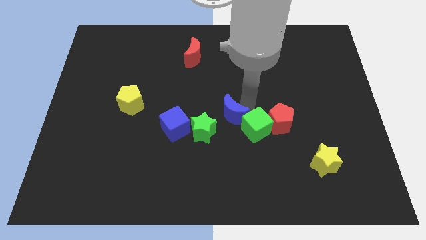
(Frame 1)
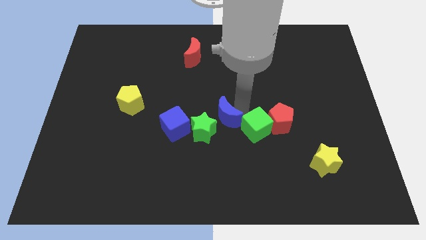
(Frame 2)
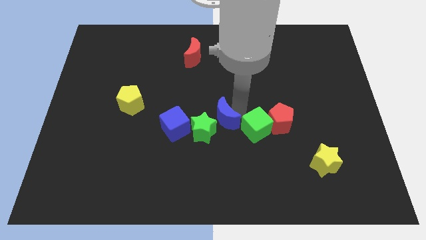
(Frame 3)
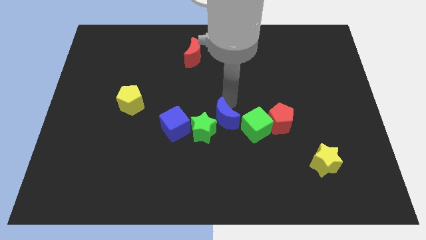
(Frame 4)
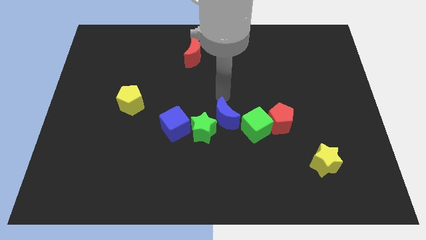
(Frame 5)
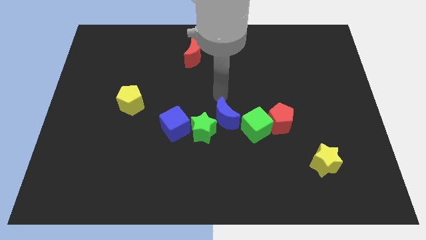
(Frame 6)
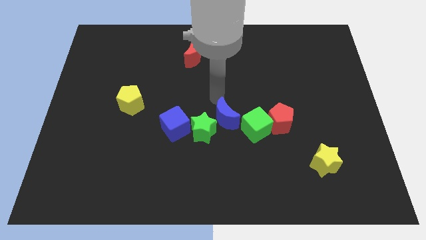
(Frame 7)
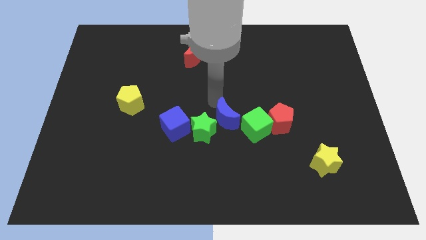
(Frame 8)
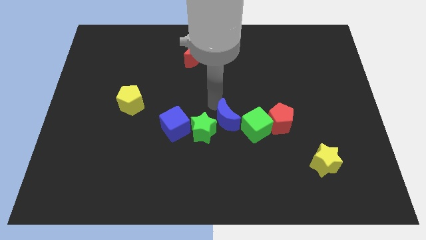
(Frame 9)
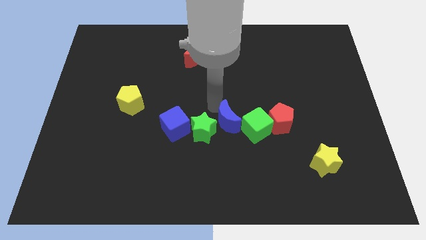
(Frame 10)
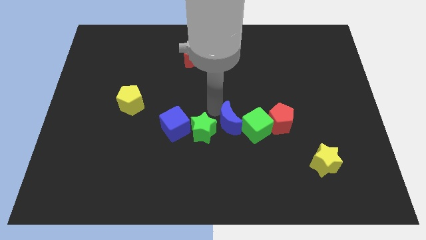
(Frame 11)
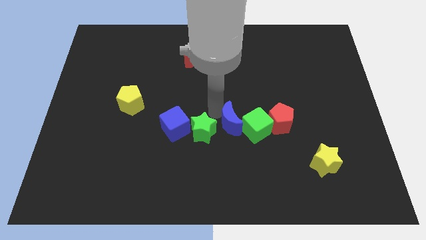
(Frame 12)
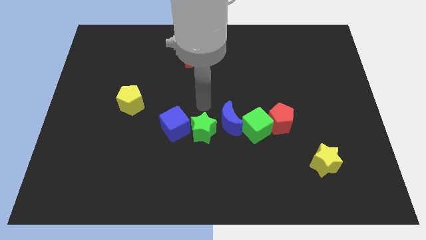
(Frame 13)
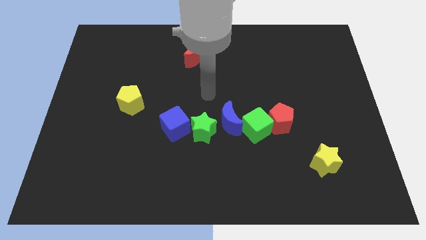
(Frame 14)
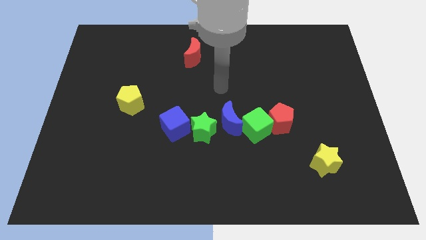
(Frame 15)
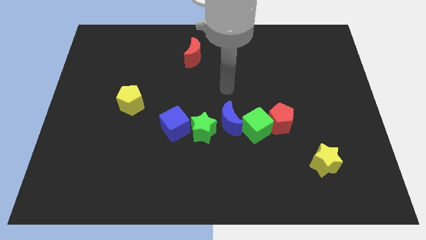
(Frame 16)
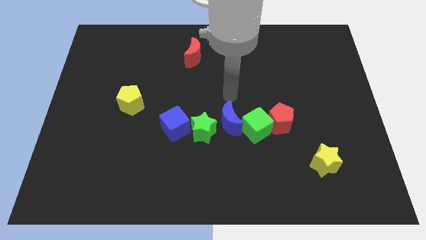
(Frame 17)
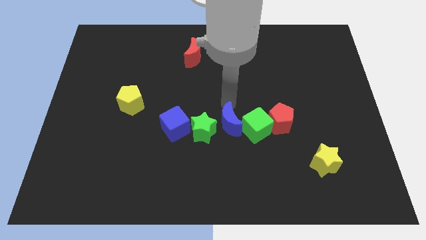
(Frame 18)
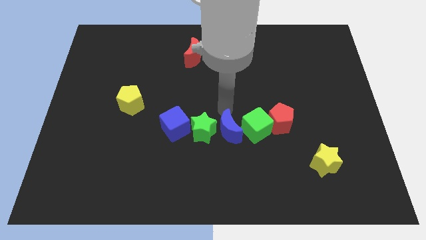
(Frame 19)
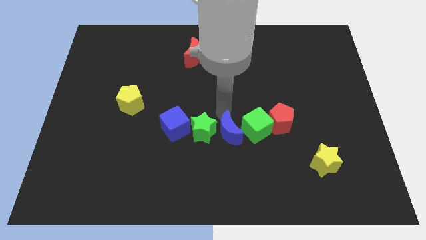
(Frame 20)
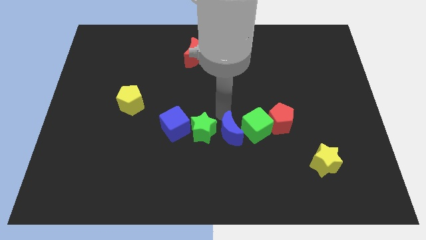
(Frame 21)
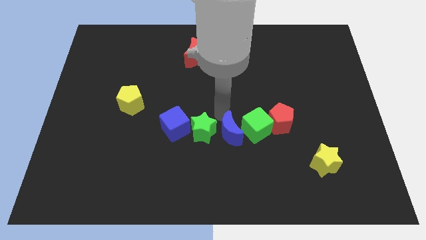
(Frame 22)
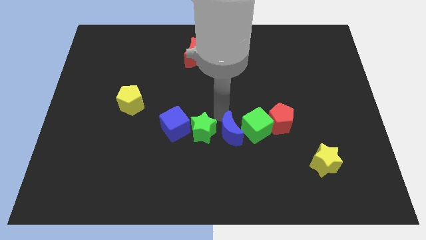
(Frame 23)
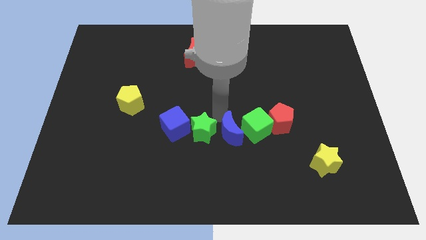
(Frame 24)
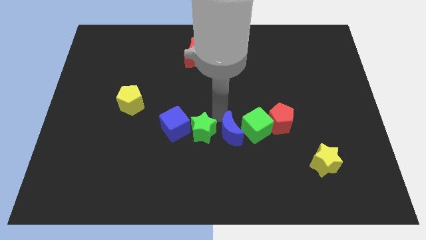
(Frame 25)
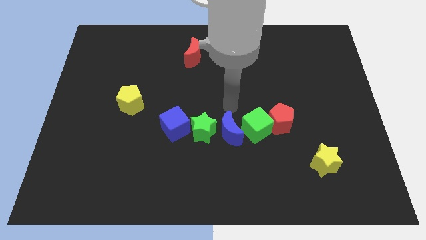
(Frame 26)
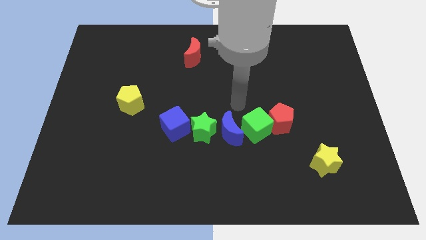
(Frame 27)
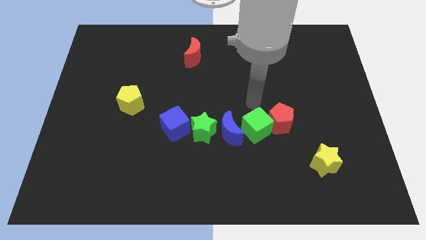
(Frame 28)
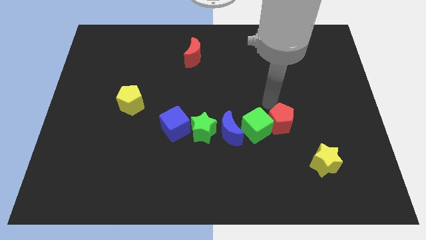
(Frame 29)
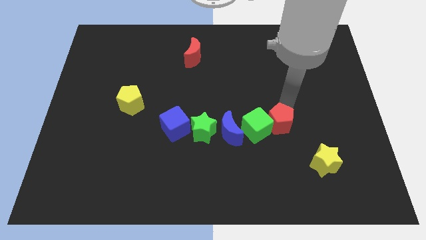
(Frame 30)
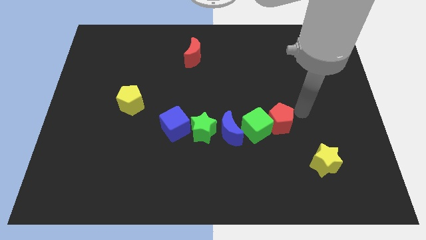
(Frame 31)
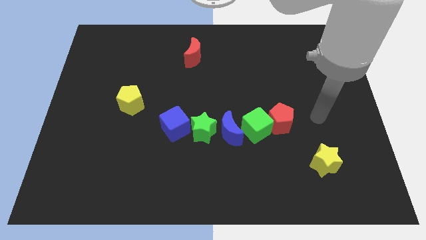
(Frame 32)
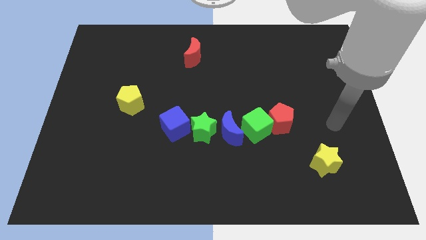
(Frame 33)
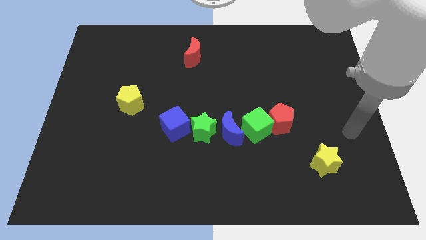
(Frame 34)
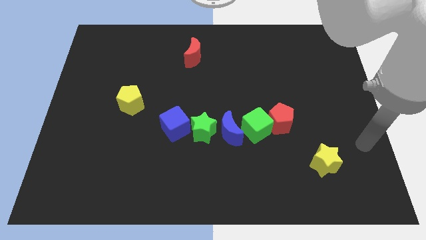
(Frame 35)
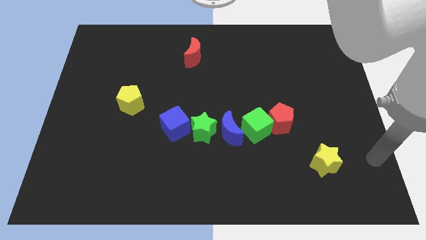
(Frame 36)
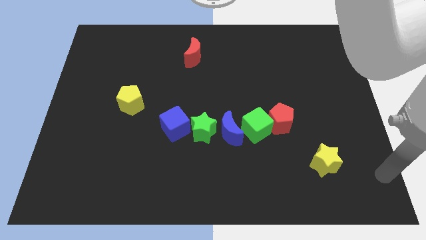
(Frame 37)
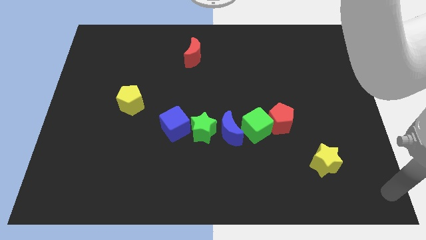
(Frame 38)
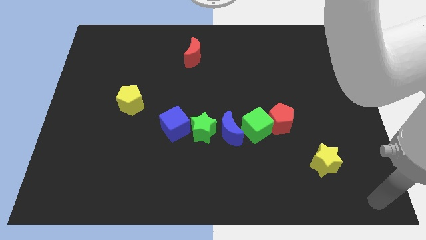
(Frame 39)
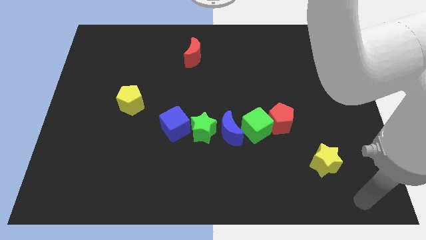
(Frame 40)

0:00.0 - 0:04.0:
push the blue crescent to the left of the green cube

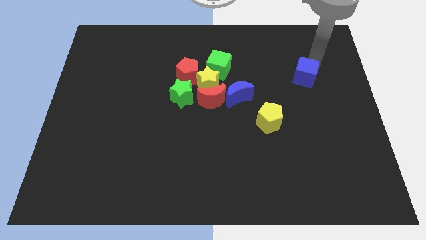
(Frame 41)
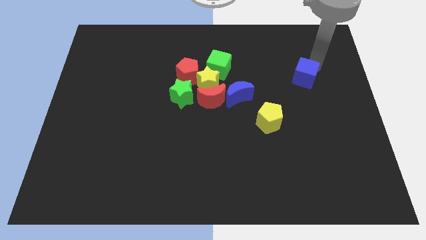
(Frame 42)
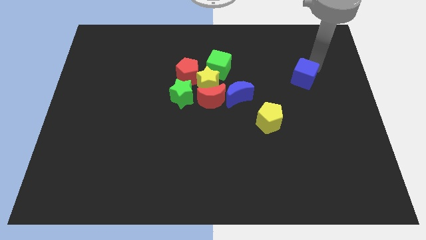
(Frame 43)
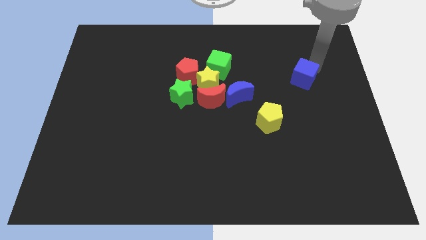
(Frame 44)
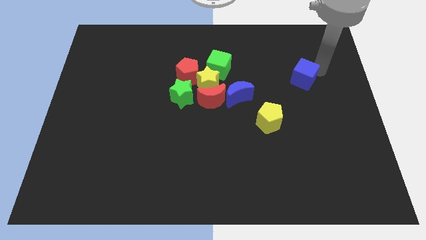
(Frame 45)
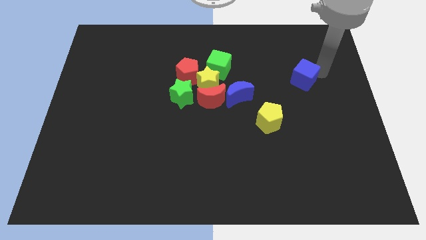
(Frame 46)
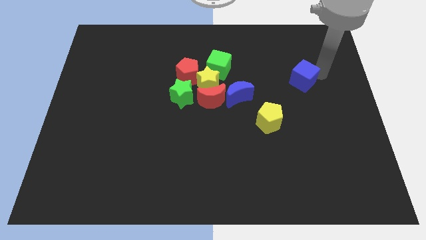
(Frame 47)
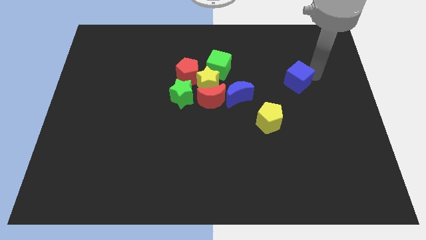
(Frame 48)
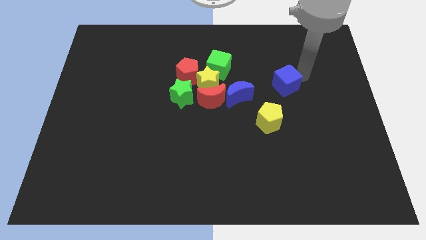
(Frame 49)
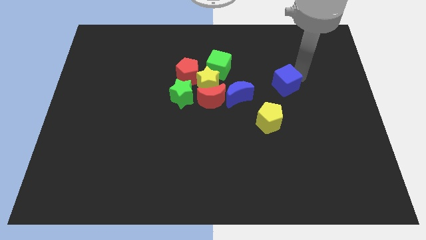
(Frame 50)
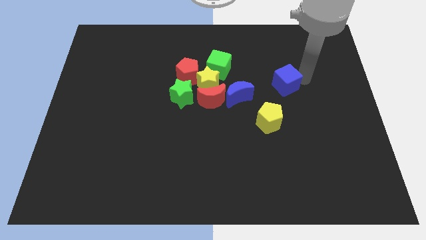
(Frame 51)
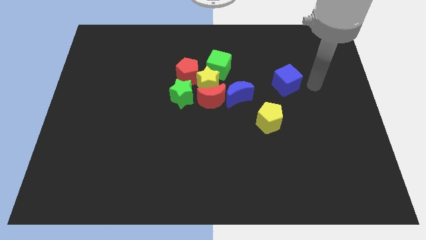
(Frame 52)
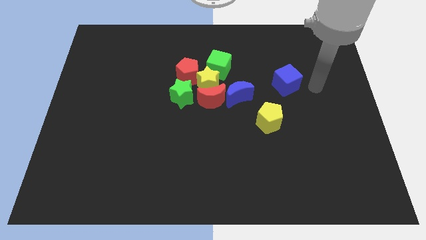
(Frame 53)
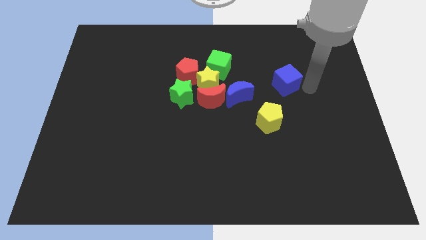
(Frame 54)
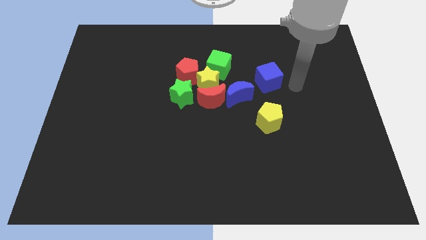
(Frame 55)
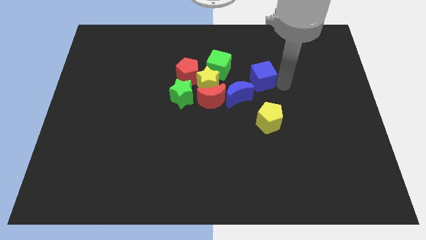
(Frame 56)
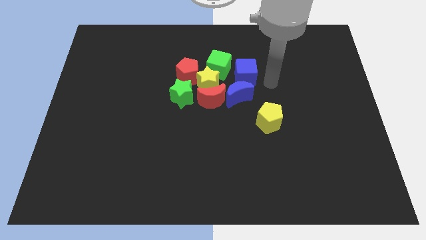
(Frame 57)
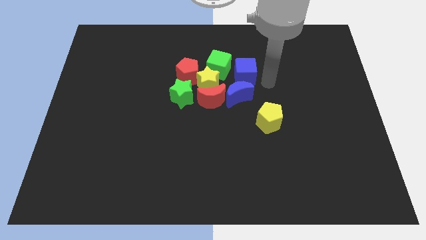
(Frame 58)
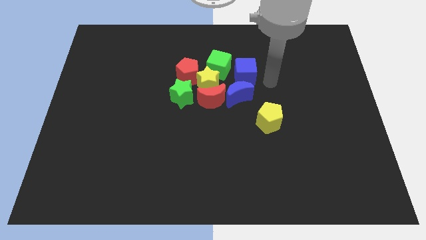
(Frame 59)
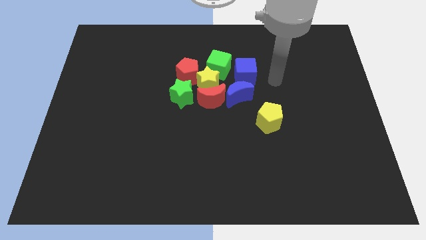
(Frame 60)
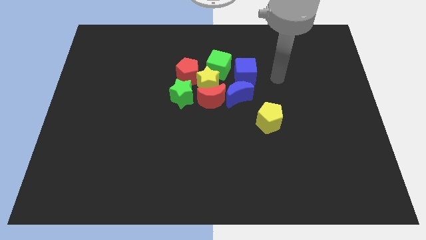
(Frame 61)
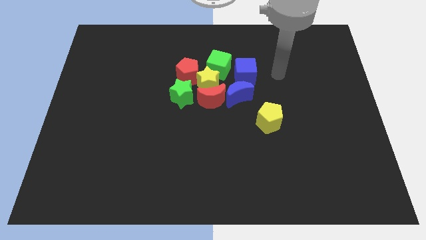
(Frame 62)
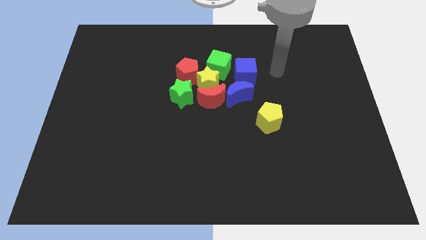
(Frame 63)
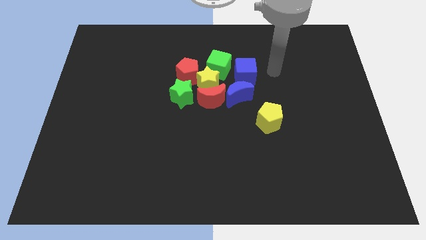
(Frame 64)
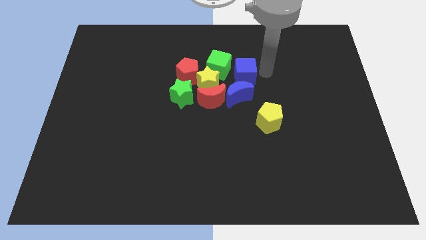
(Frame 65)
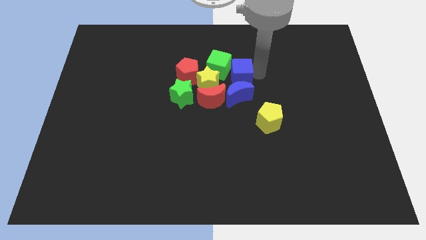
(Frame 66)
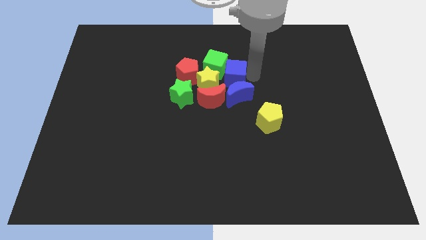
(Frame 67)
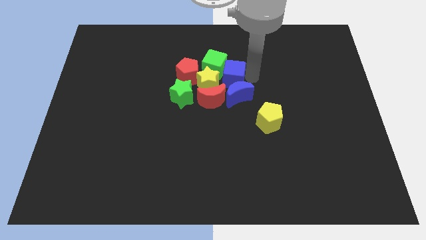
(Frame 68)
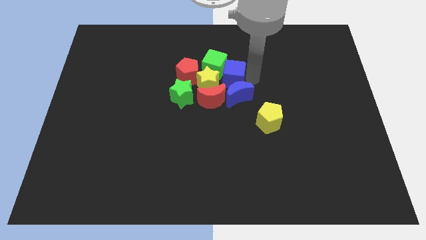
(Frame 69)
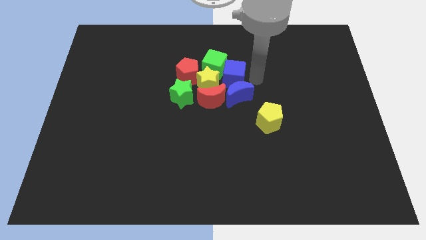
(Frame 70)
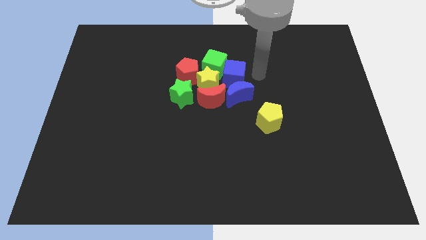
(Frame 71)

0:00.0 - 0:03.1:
move blue cube above blue moon

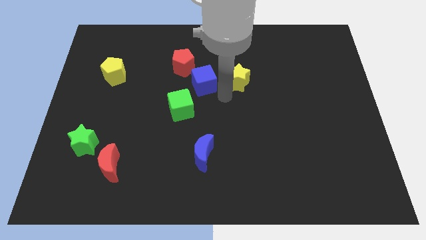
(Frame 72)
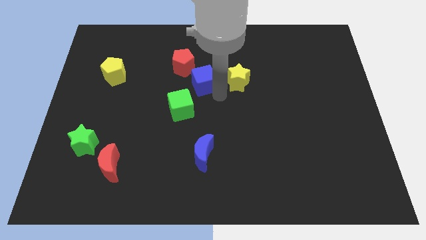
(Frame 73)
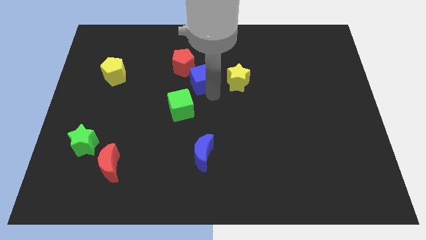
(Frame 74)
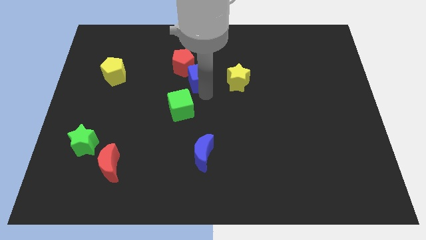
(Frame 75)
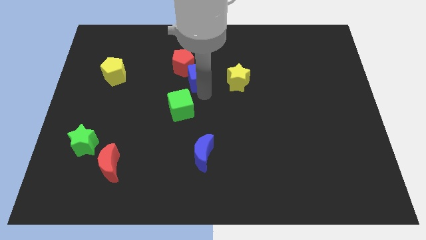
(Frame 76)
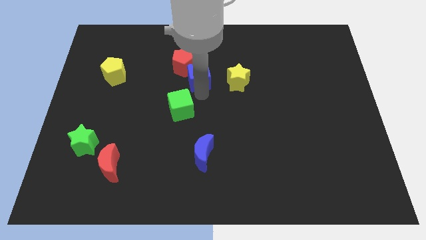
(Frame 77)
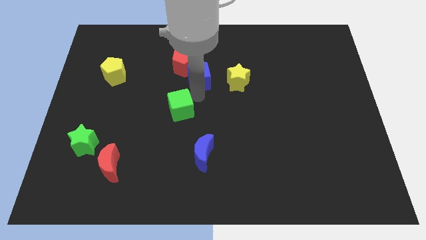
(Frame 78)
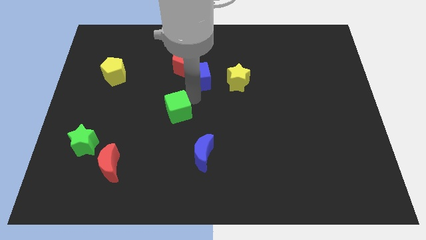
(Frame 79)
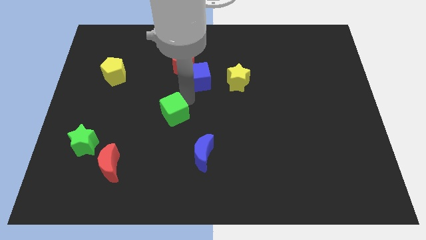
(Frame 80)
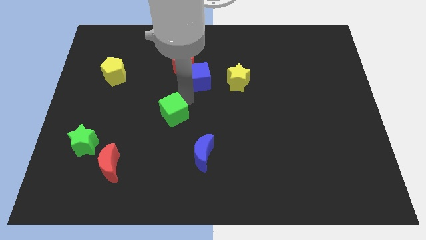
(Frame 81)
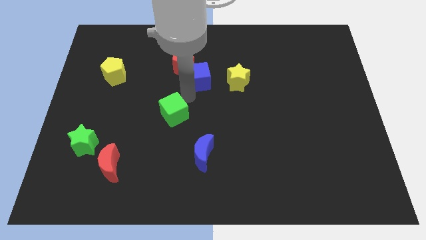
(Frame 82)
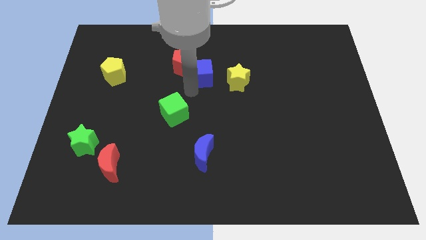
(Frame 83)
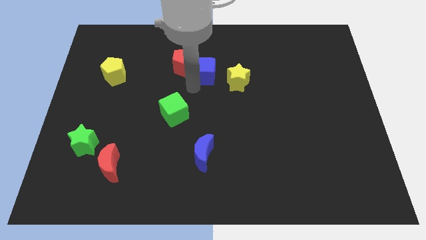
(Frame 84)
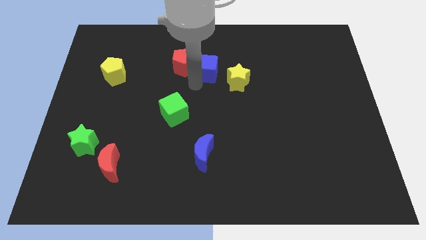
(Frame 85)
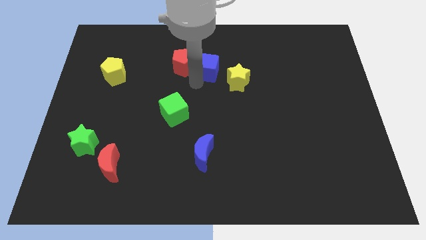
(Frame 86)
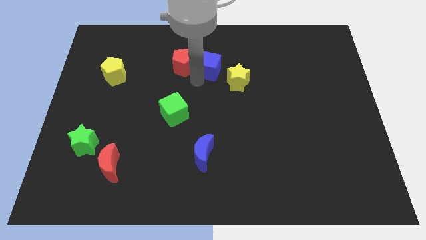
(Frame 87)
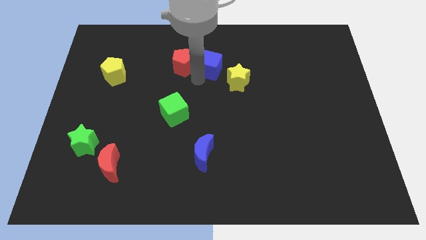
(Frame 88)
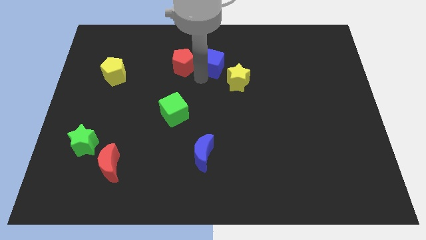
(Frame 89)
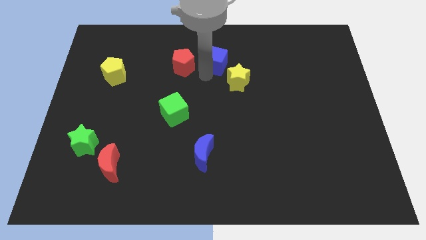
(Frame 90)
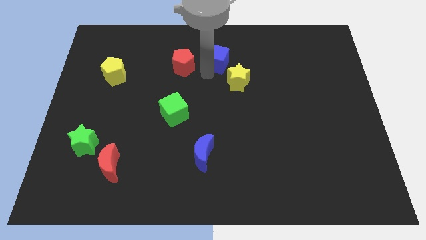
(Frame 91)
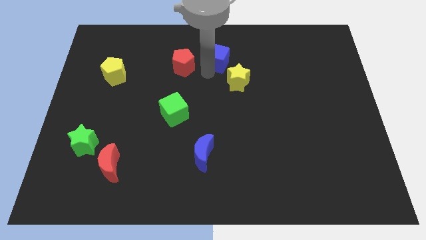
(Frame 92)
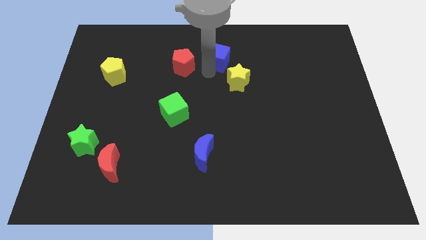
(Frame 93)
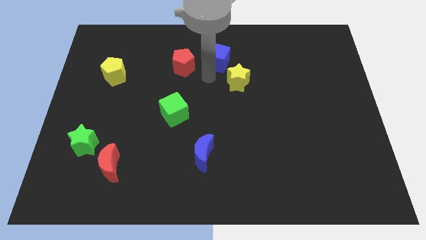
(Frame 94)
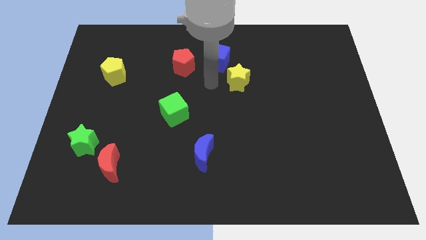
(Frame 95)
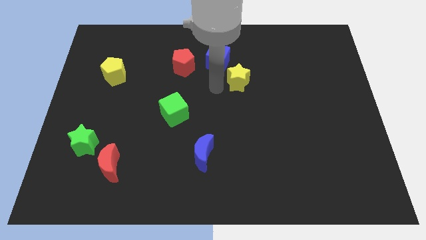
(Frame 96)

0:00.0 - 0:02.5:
separate the green cube and blue cube towards upwards
